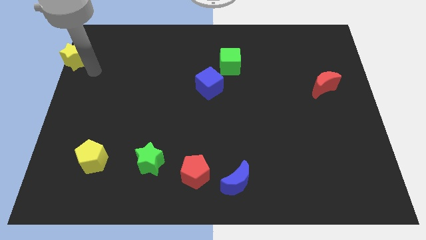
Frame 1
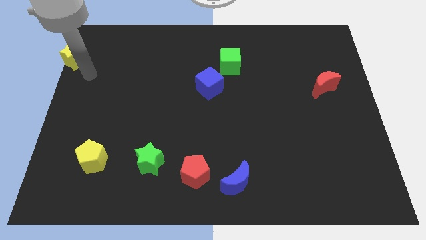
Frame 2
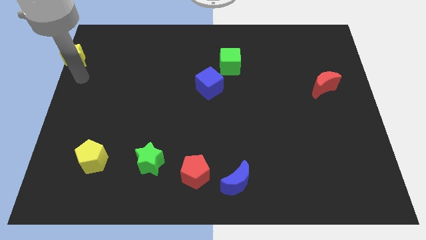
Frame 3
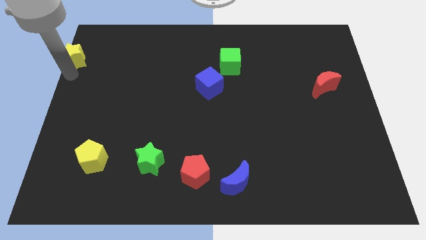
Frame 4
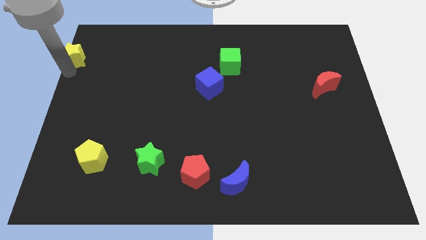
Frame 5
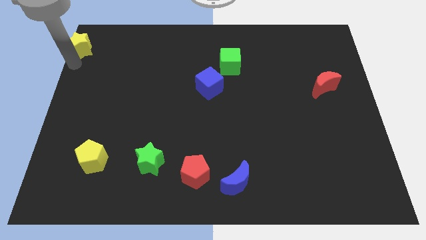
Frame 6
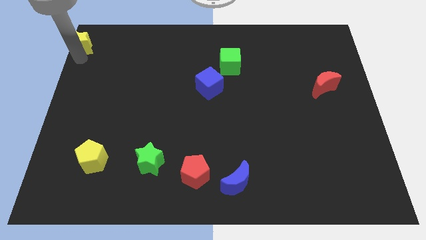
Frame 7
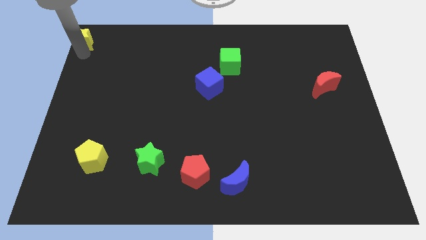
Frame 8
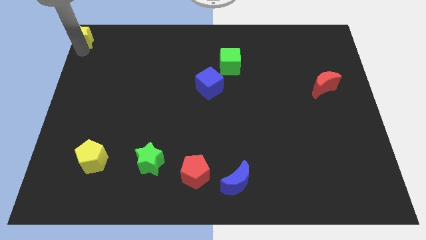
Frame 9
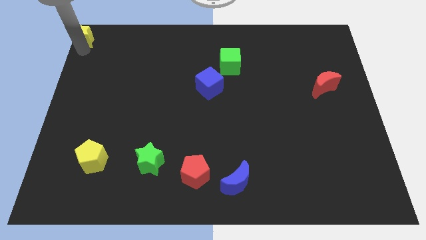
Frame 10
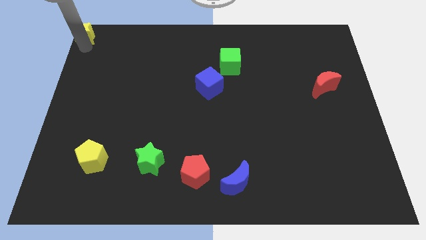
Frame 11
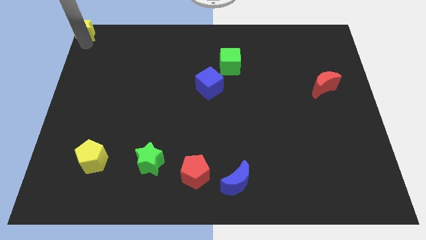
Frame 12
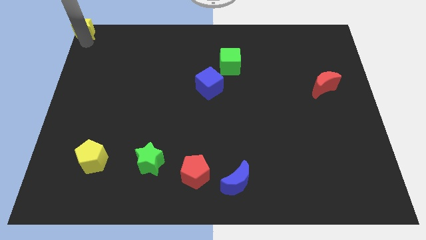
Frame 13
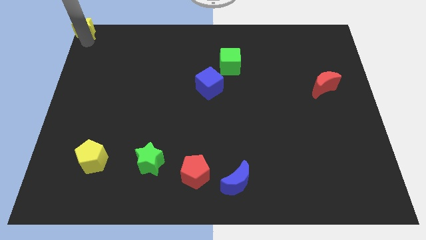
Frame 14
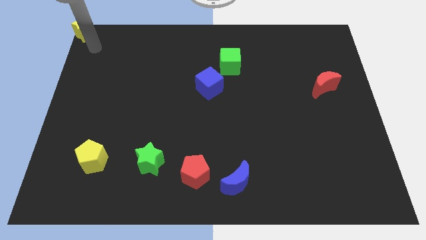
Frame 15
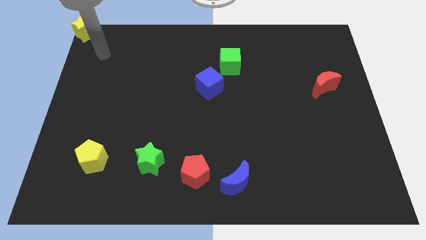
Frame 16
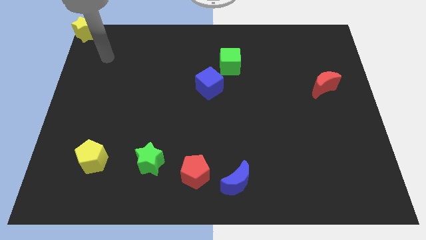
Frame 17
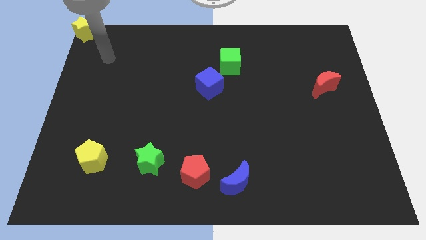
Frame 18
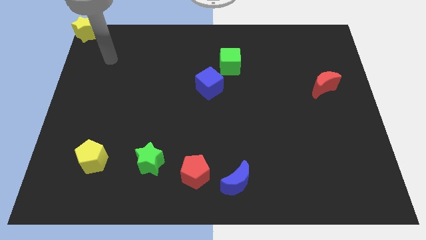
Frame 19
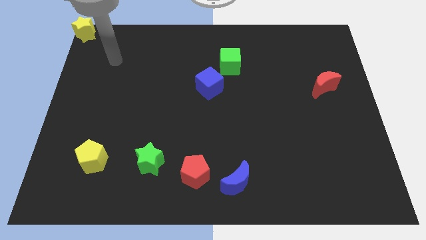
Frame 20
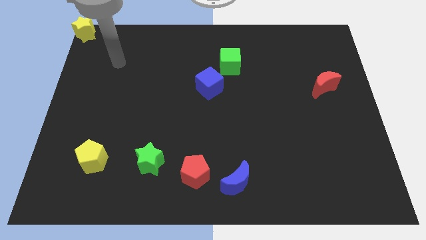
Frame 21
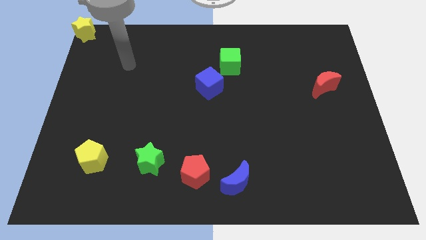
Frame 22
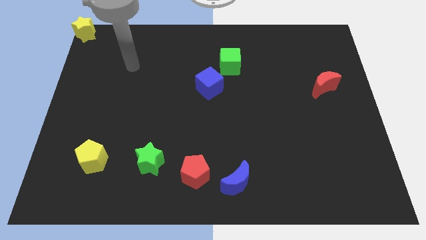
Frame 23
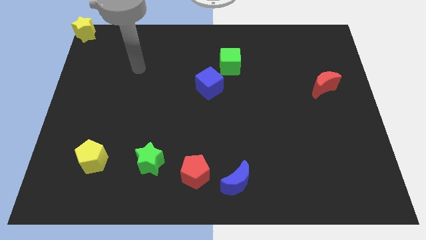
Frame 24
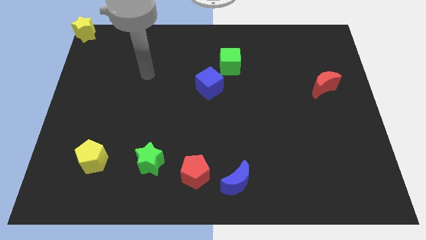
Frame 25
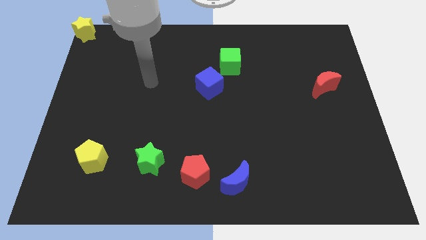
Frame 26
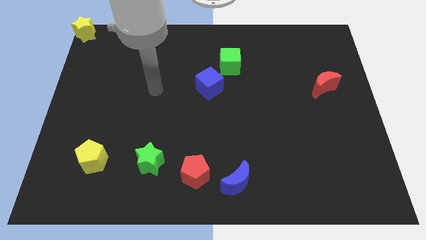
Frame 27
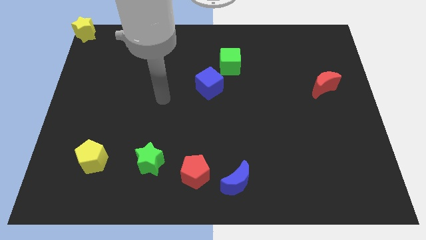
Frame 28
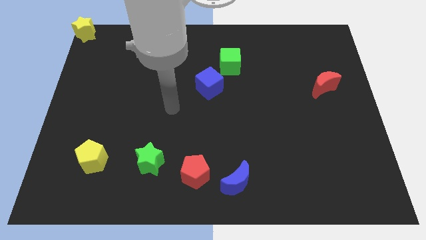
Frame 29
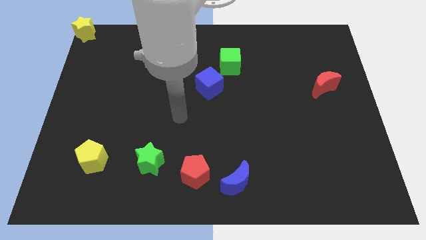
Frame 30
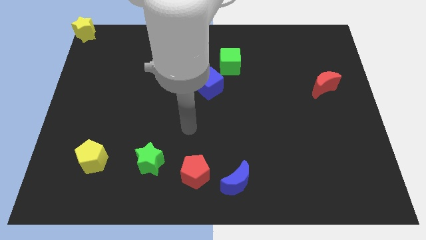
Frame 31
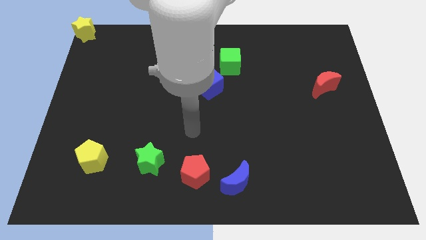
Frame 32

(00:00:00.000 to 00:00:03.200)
move your arm away from yellow star

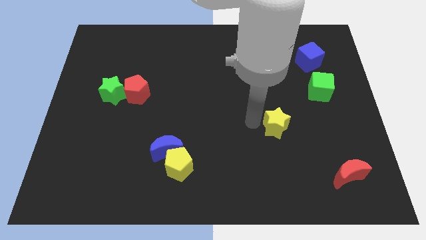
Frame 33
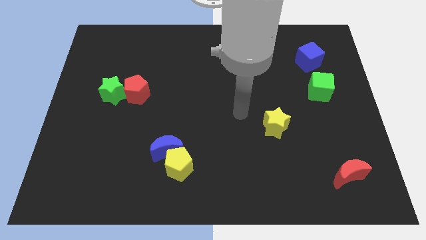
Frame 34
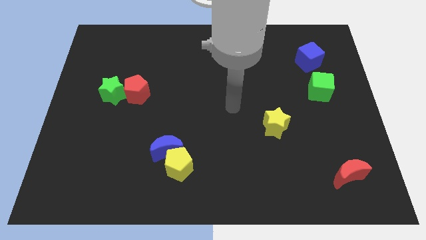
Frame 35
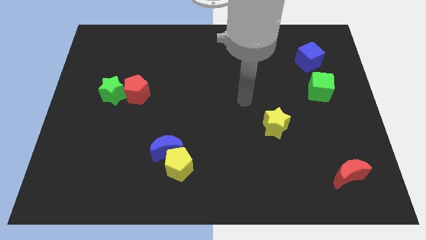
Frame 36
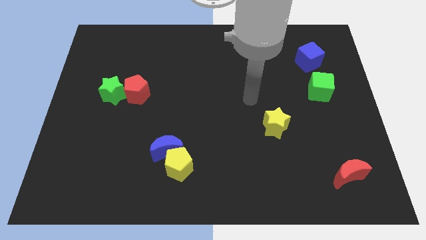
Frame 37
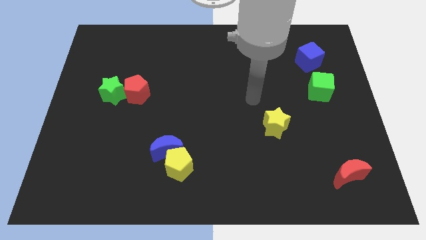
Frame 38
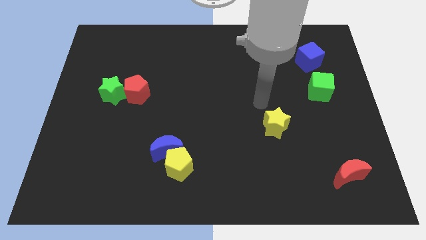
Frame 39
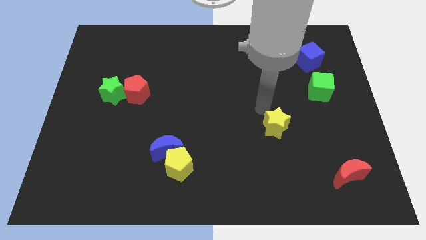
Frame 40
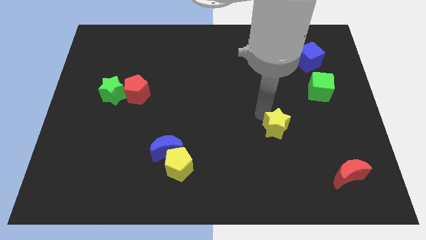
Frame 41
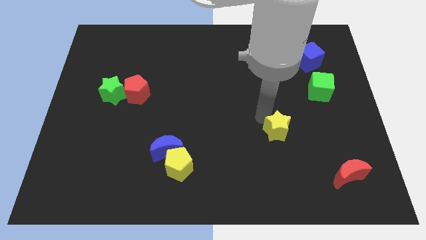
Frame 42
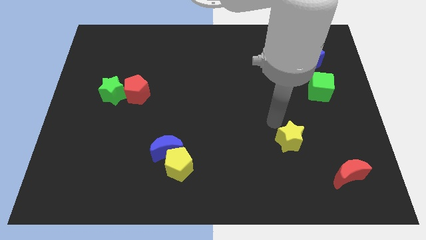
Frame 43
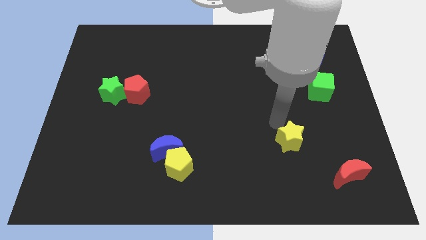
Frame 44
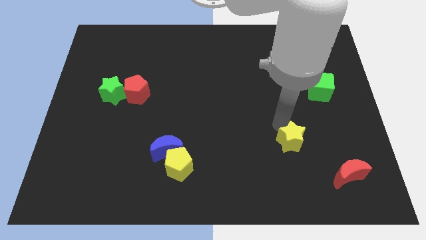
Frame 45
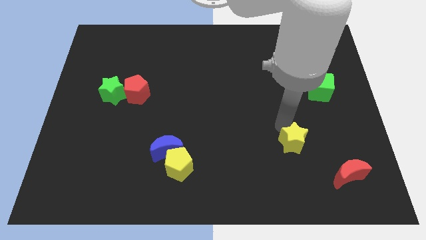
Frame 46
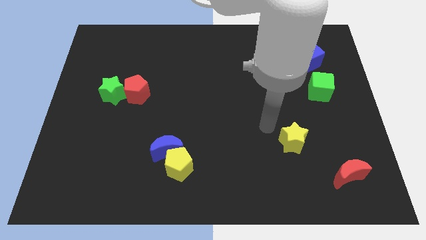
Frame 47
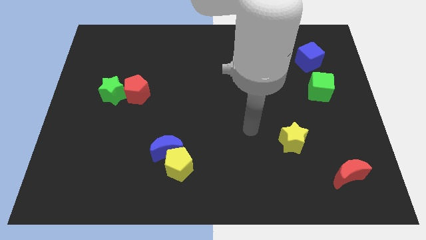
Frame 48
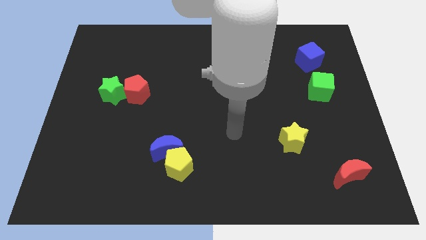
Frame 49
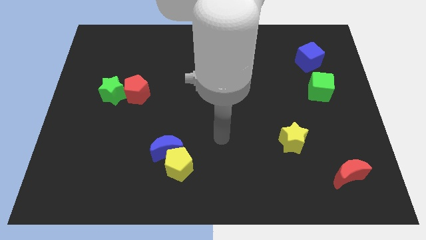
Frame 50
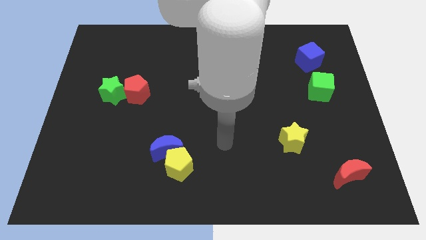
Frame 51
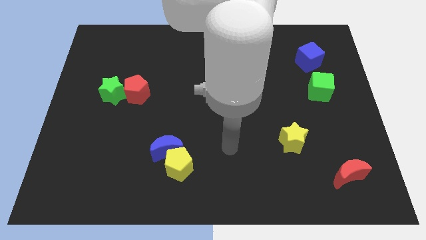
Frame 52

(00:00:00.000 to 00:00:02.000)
move the yellow star towards the red moon

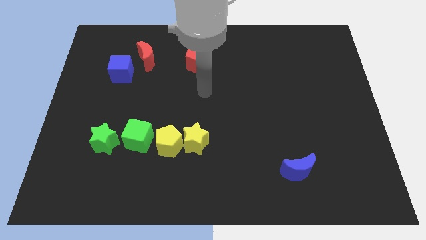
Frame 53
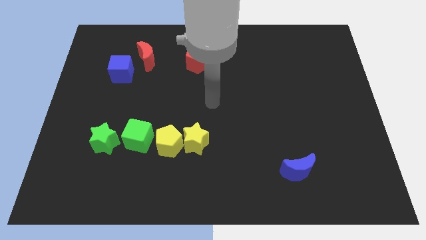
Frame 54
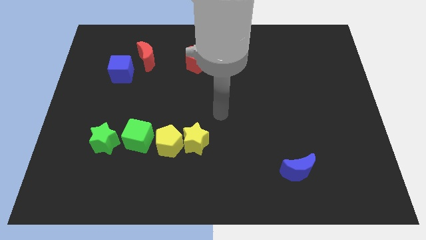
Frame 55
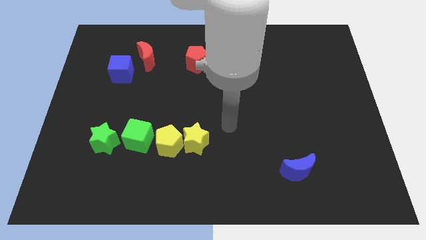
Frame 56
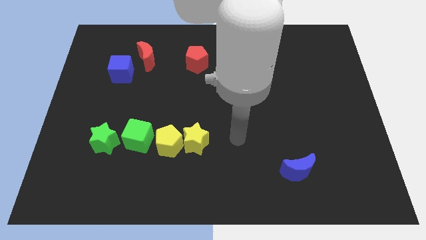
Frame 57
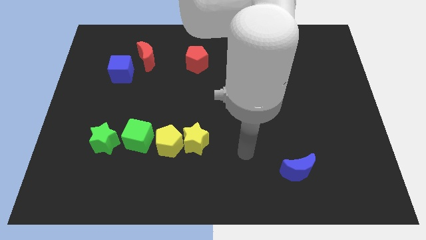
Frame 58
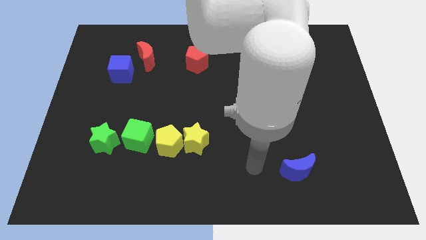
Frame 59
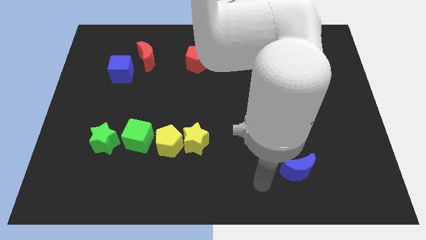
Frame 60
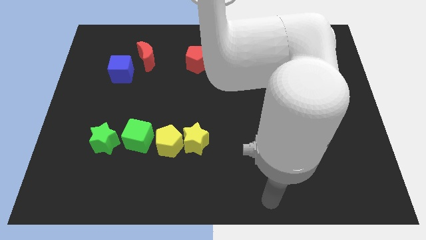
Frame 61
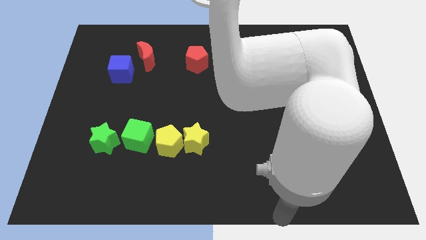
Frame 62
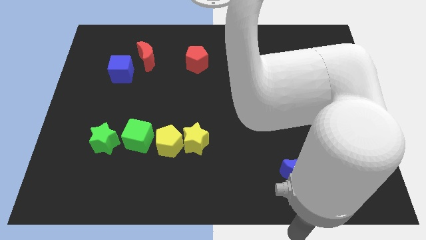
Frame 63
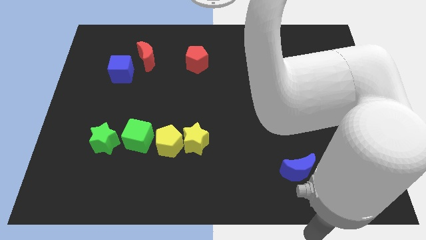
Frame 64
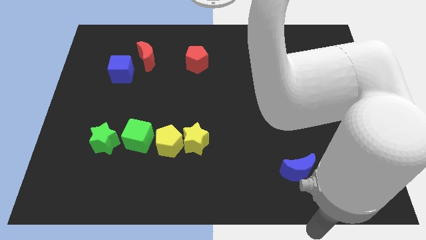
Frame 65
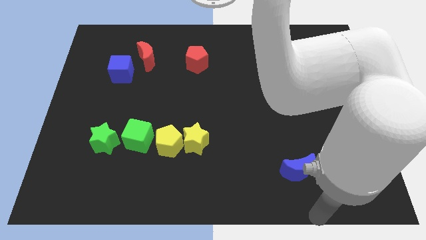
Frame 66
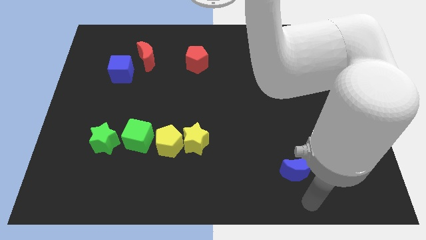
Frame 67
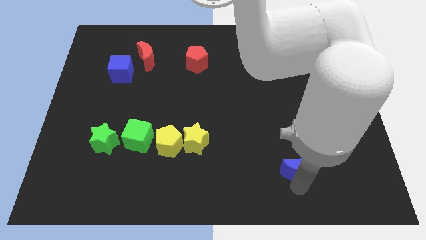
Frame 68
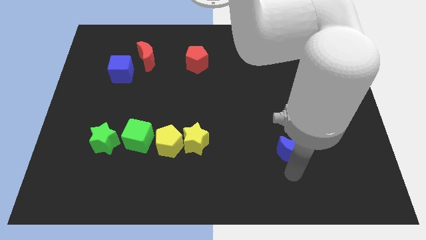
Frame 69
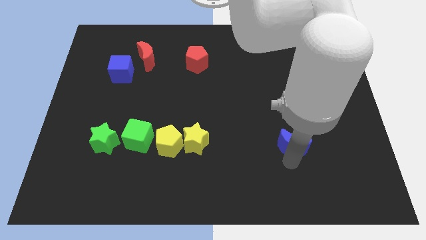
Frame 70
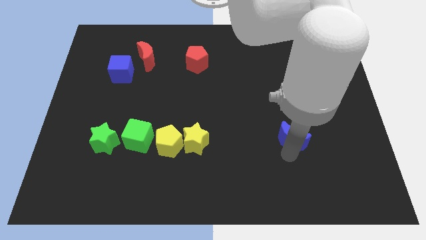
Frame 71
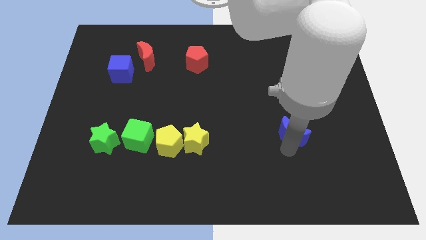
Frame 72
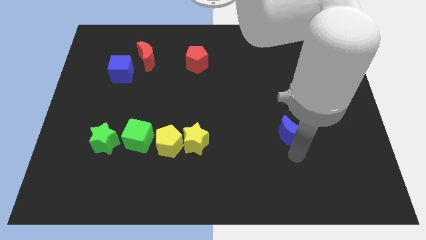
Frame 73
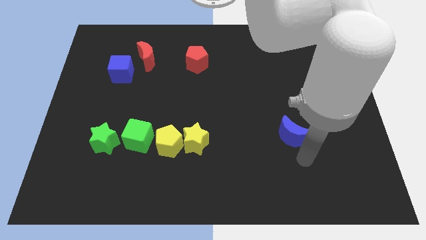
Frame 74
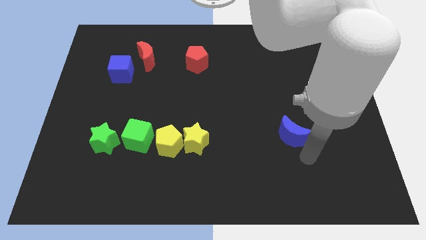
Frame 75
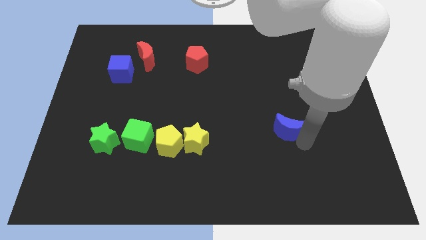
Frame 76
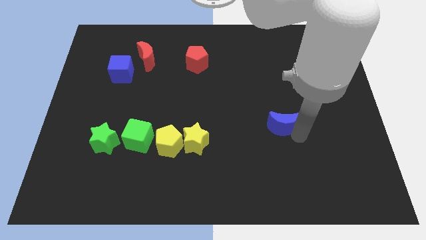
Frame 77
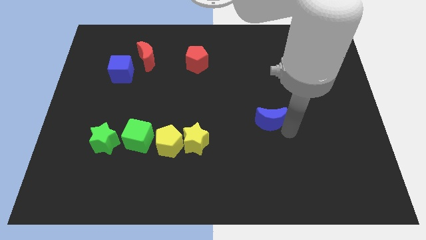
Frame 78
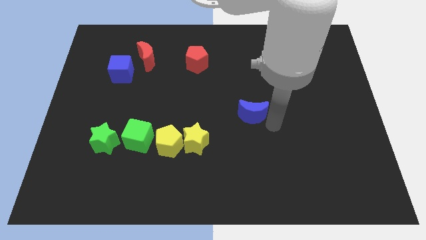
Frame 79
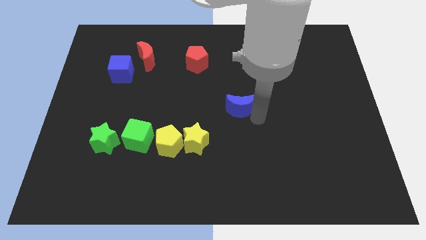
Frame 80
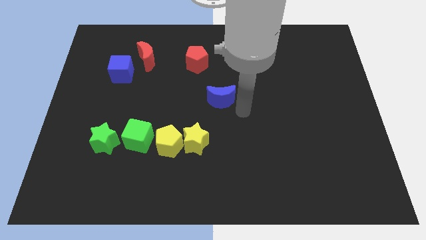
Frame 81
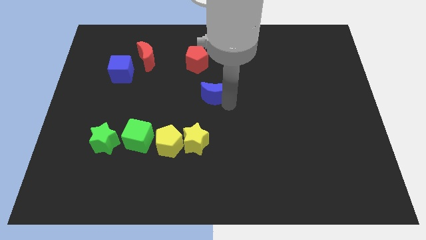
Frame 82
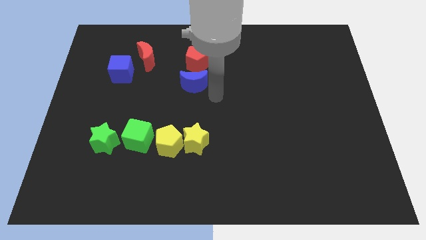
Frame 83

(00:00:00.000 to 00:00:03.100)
push the blue crescent below the red pentagon

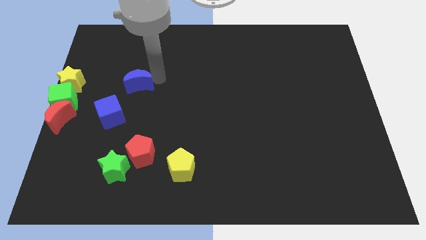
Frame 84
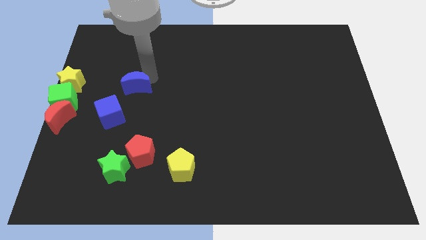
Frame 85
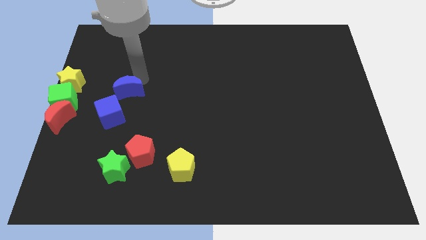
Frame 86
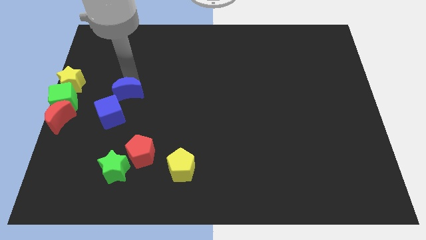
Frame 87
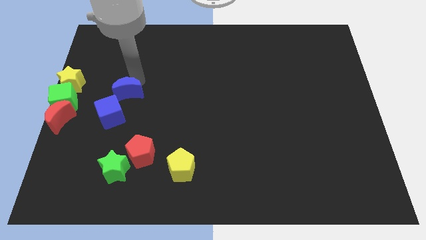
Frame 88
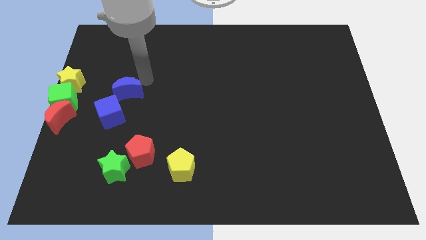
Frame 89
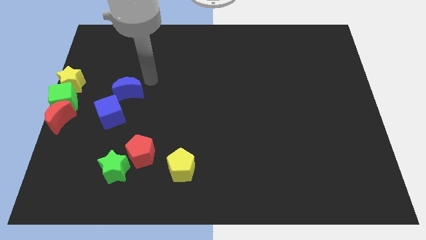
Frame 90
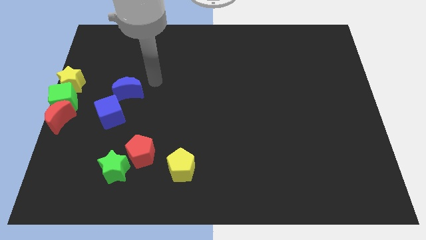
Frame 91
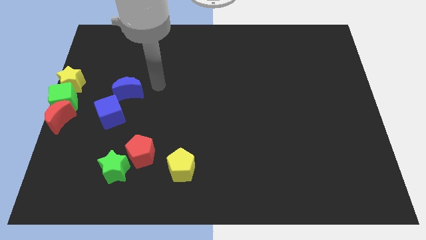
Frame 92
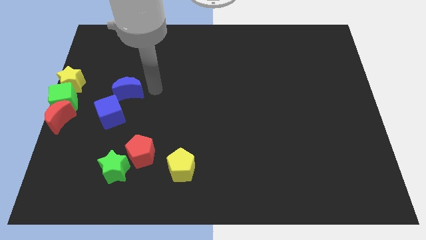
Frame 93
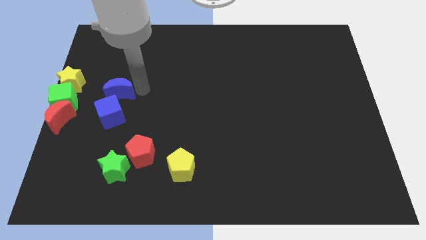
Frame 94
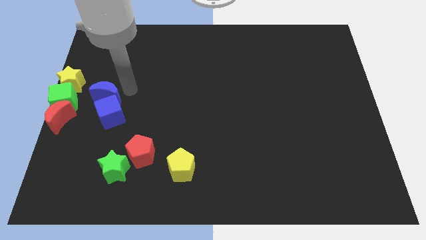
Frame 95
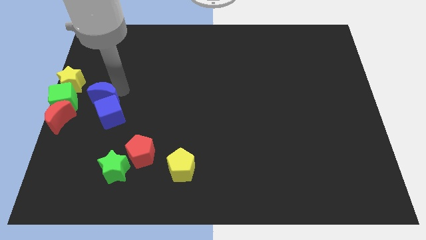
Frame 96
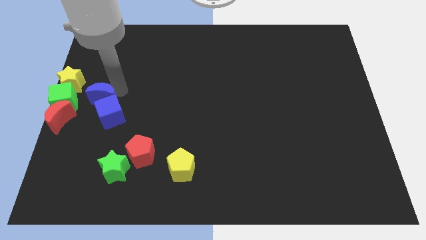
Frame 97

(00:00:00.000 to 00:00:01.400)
place the blue moon above the blue cube
